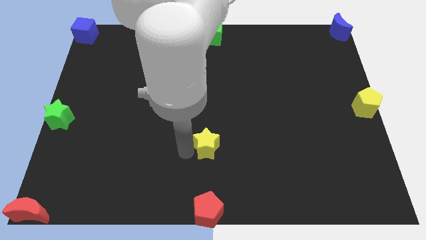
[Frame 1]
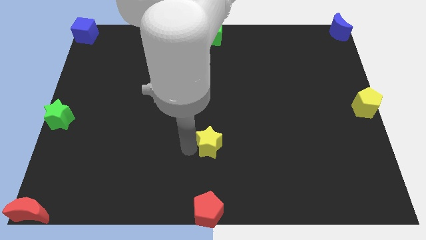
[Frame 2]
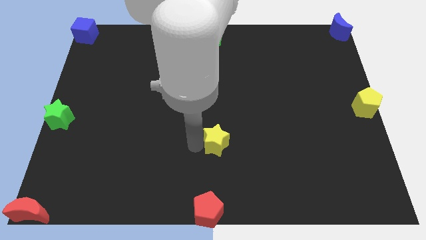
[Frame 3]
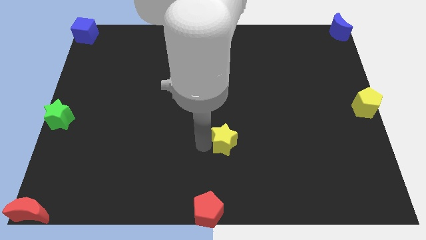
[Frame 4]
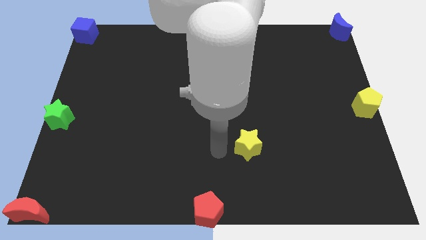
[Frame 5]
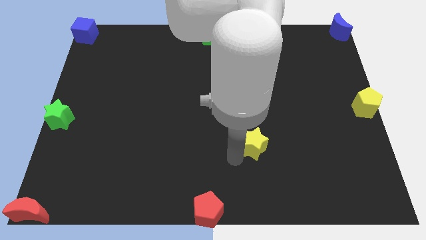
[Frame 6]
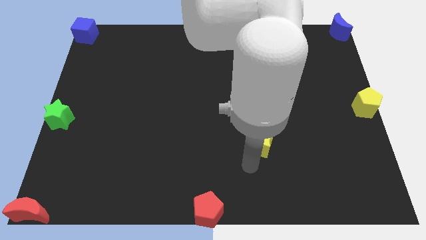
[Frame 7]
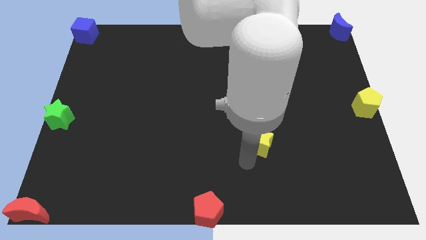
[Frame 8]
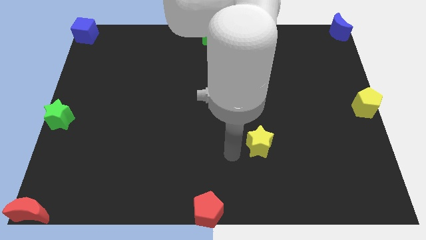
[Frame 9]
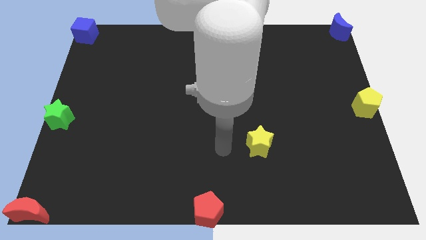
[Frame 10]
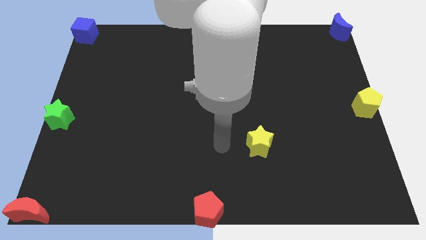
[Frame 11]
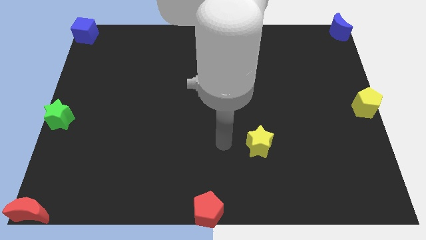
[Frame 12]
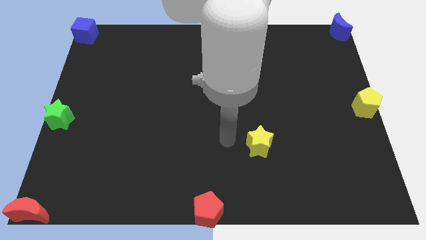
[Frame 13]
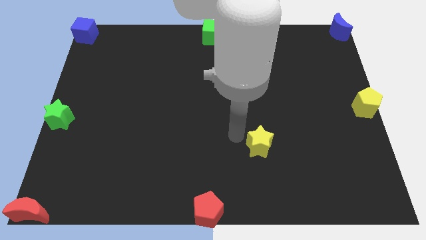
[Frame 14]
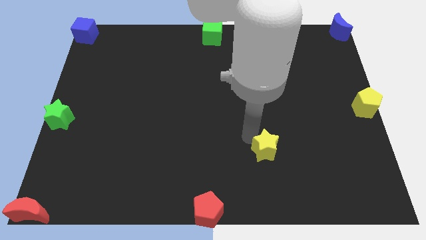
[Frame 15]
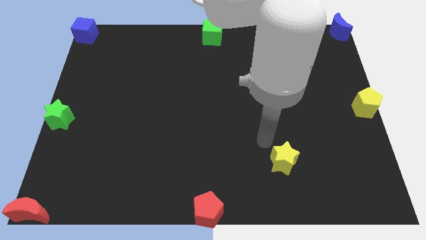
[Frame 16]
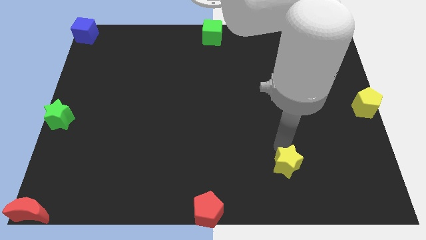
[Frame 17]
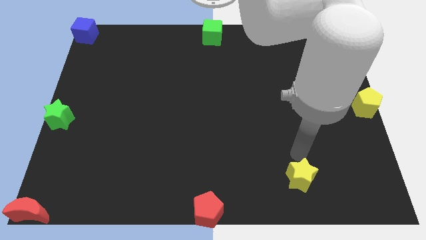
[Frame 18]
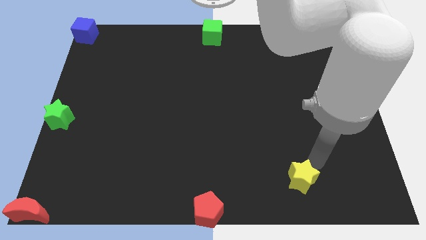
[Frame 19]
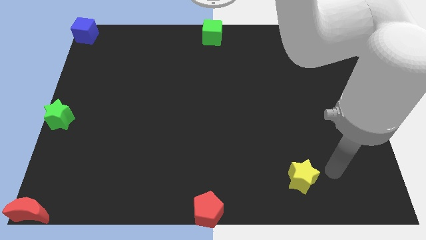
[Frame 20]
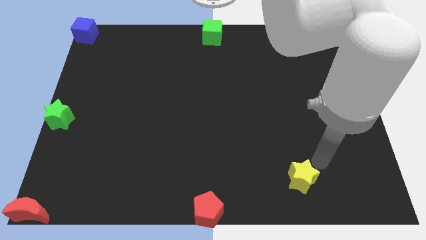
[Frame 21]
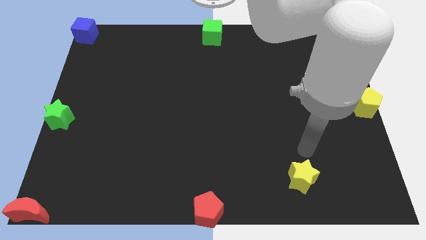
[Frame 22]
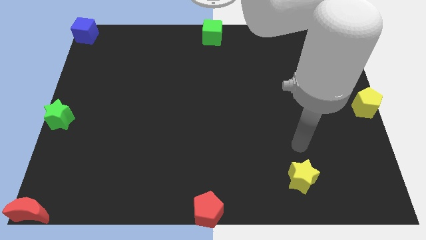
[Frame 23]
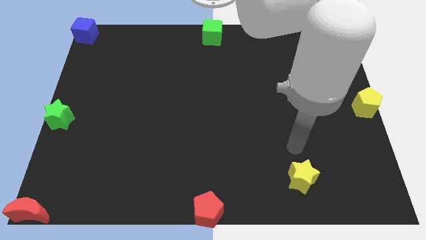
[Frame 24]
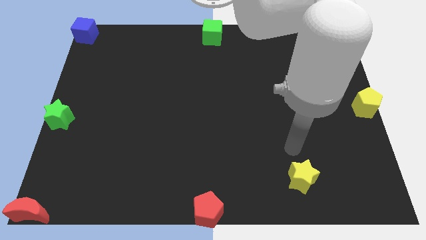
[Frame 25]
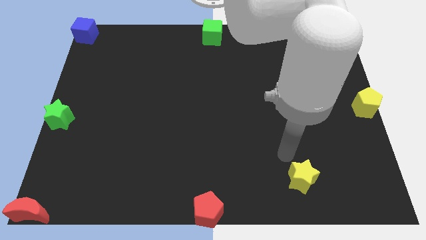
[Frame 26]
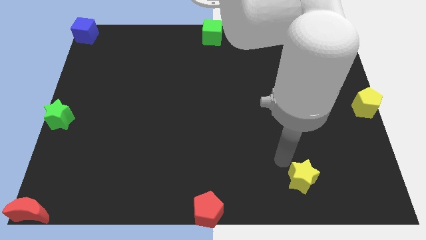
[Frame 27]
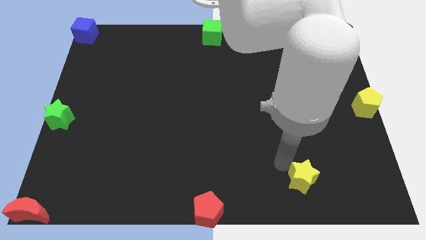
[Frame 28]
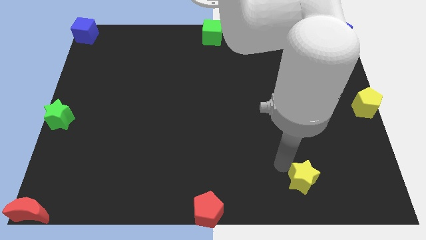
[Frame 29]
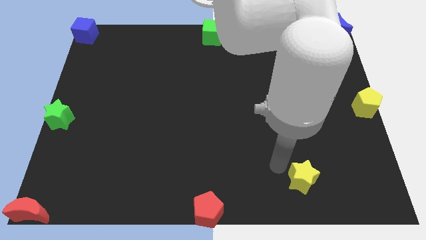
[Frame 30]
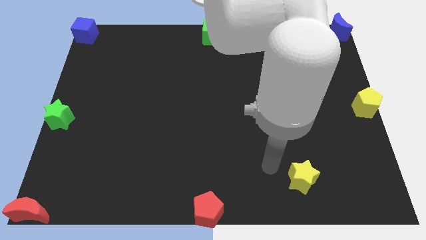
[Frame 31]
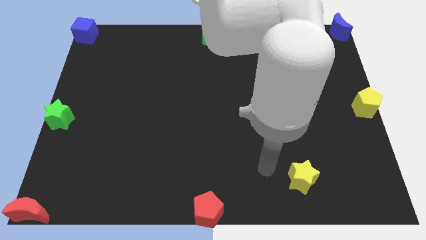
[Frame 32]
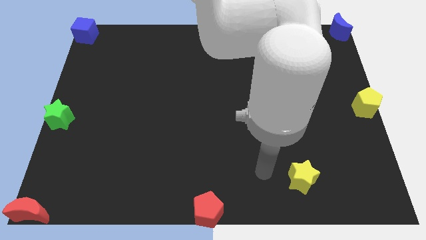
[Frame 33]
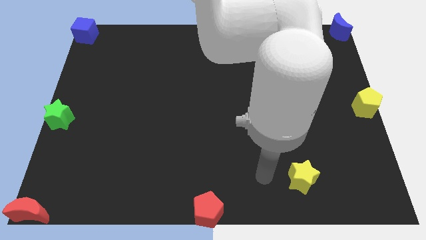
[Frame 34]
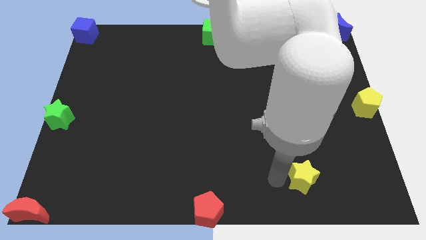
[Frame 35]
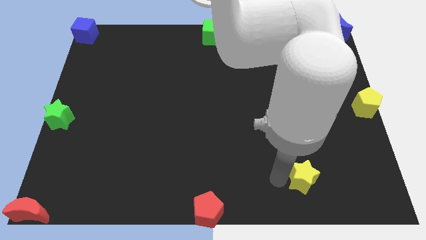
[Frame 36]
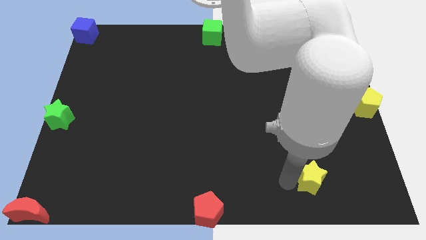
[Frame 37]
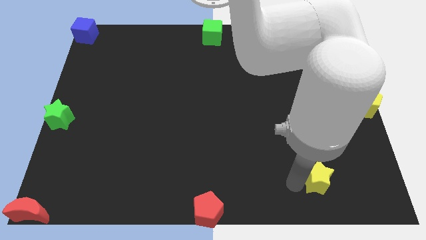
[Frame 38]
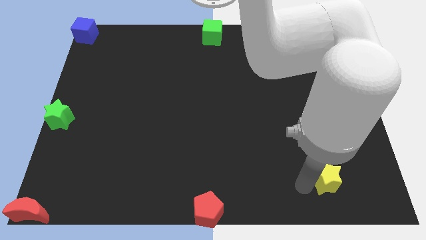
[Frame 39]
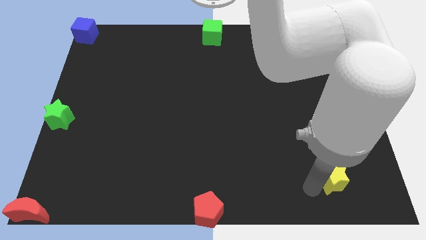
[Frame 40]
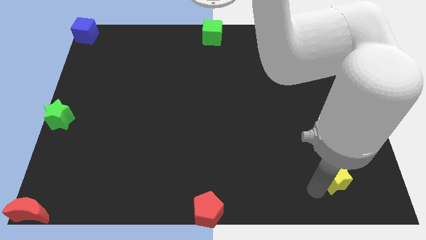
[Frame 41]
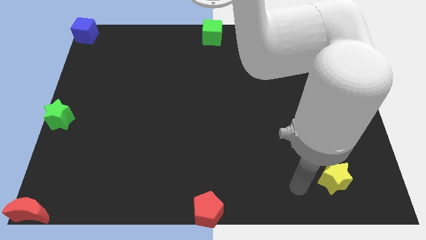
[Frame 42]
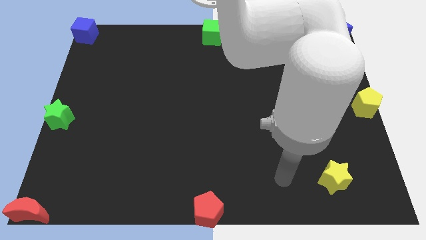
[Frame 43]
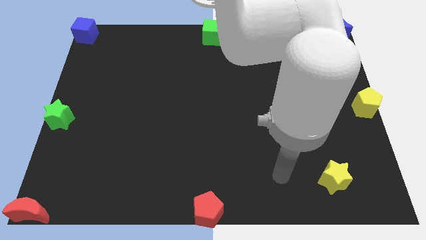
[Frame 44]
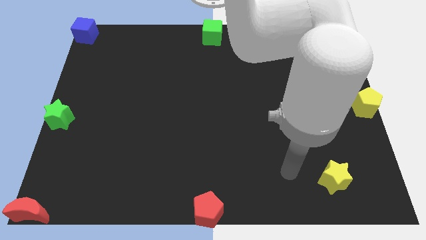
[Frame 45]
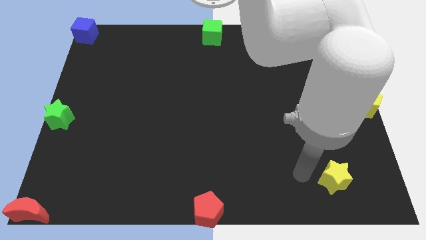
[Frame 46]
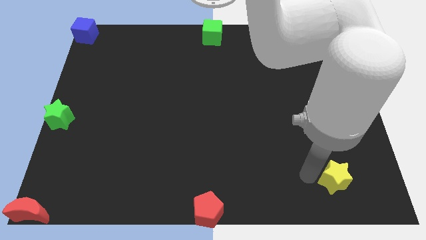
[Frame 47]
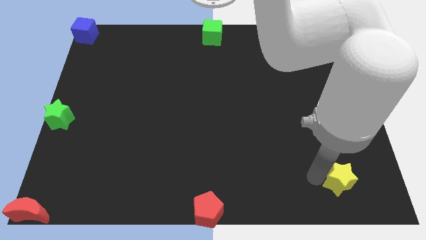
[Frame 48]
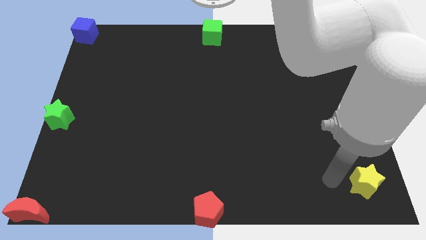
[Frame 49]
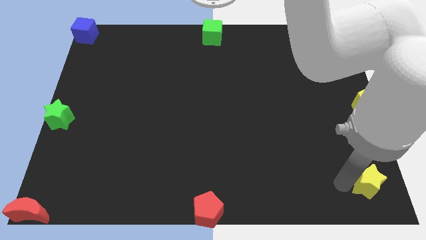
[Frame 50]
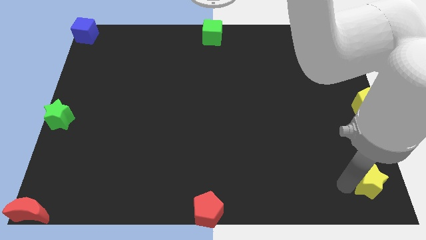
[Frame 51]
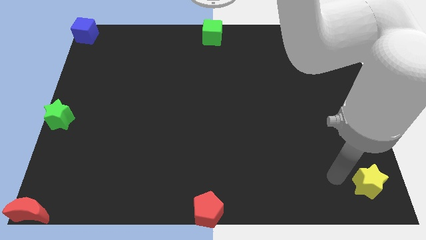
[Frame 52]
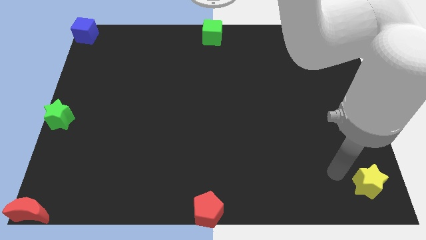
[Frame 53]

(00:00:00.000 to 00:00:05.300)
push the yellow star to the right bottom

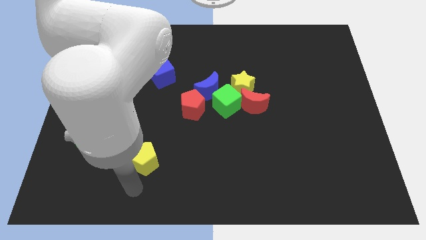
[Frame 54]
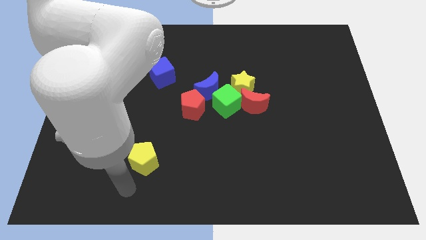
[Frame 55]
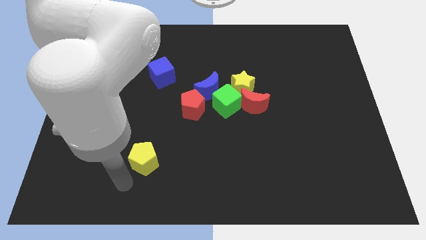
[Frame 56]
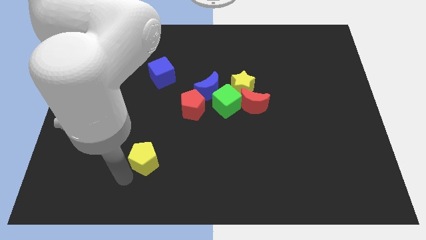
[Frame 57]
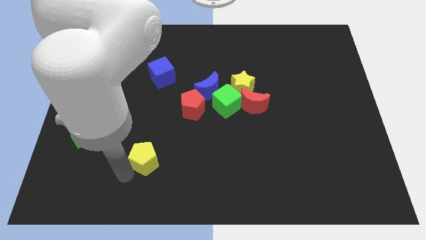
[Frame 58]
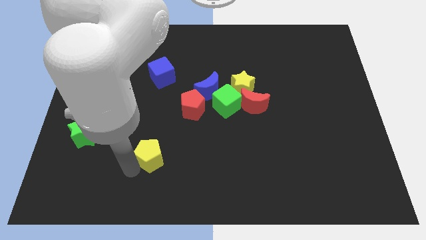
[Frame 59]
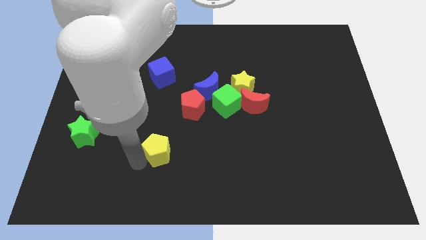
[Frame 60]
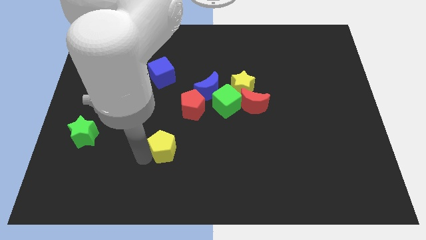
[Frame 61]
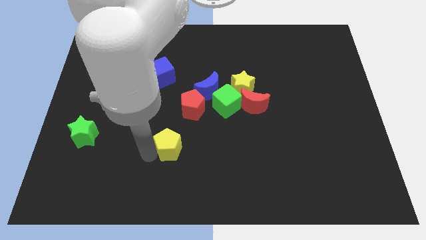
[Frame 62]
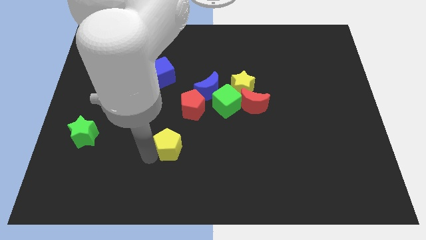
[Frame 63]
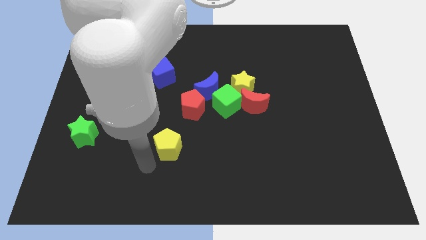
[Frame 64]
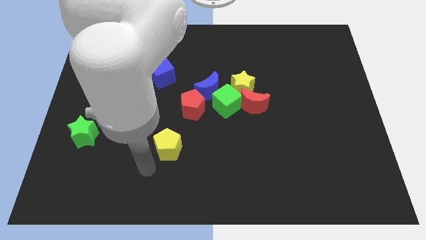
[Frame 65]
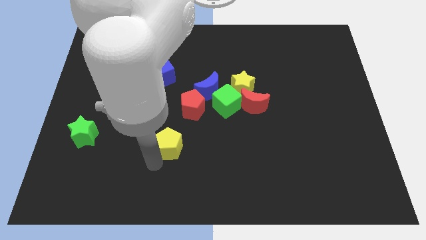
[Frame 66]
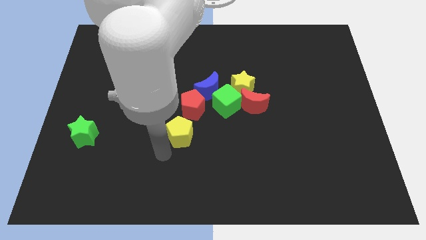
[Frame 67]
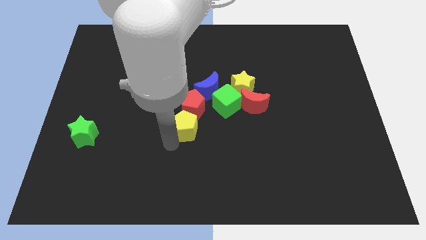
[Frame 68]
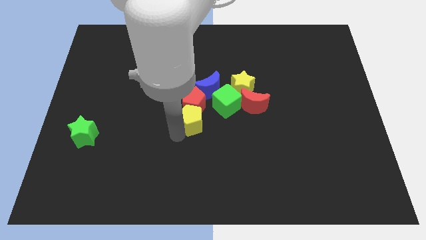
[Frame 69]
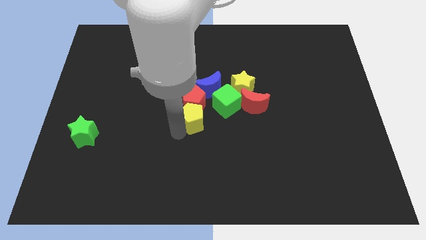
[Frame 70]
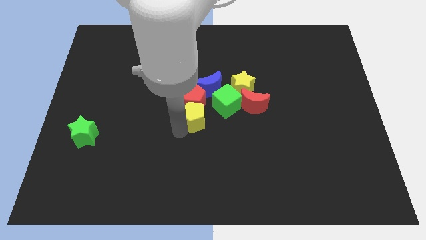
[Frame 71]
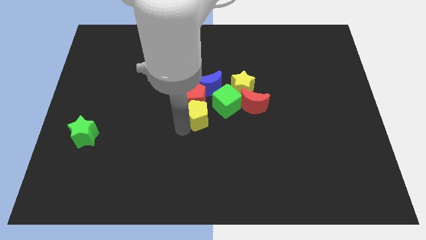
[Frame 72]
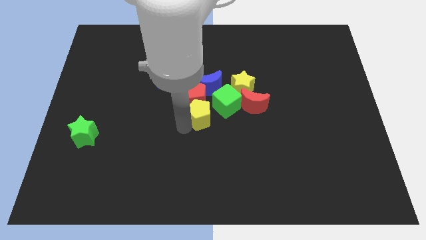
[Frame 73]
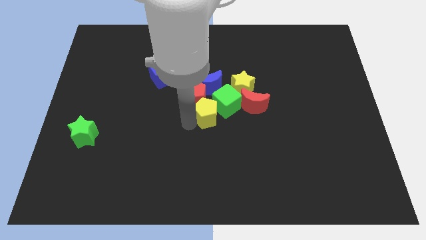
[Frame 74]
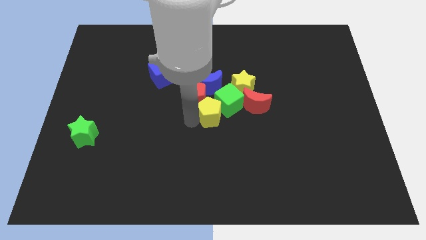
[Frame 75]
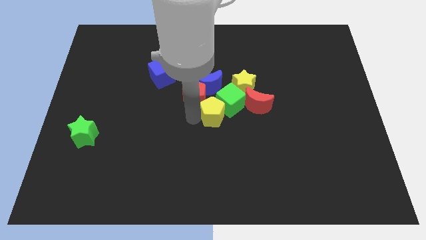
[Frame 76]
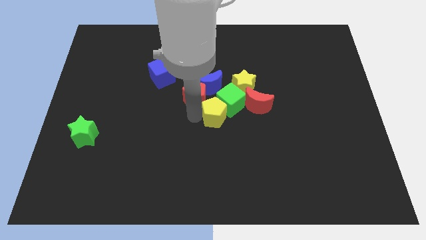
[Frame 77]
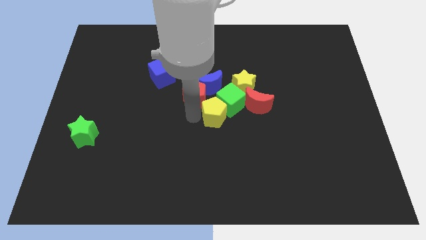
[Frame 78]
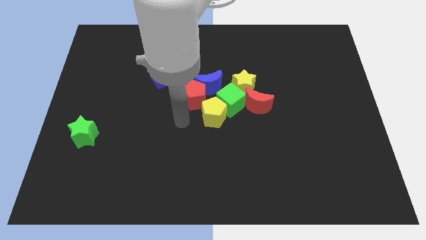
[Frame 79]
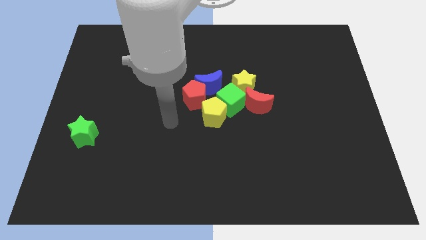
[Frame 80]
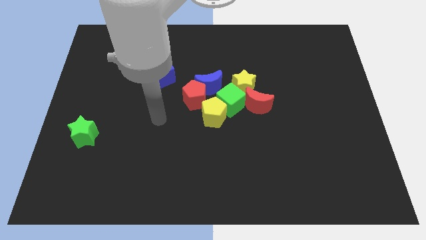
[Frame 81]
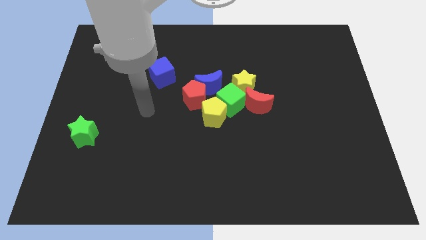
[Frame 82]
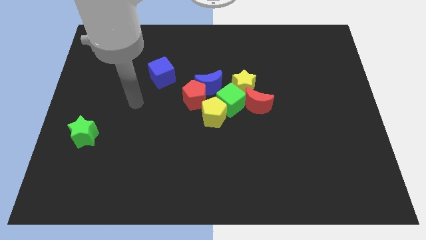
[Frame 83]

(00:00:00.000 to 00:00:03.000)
push the yellow pentgaon into the group of blocks

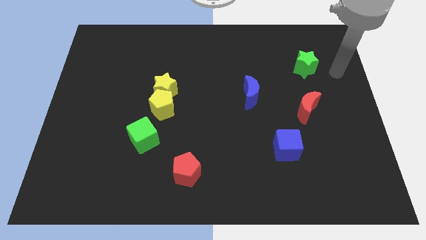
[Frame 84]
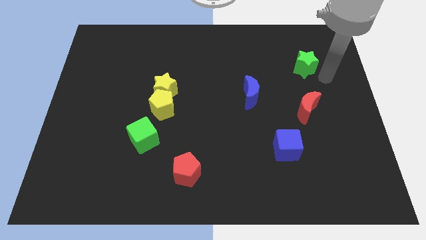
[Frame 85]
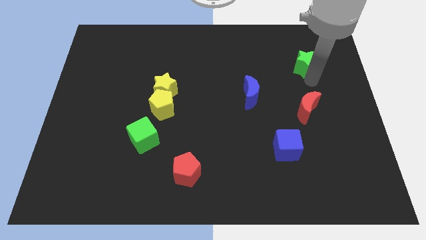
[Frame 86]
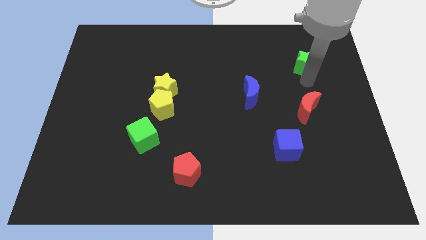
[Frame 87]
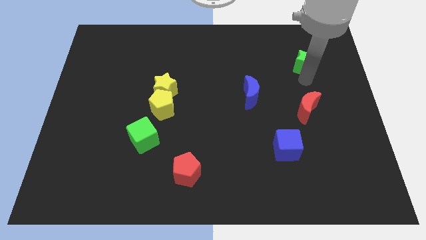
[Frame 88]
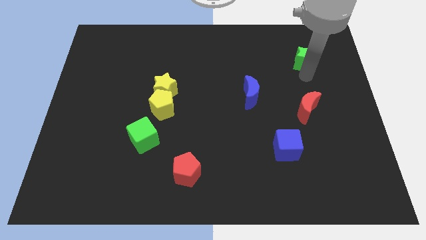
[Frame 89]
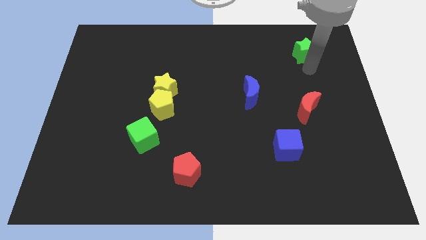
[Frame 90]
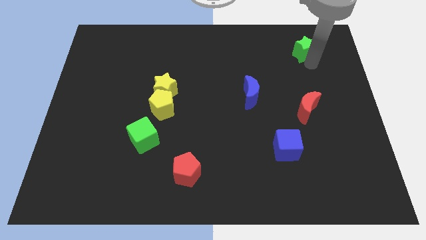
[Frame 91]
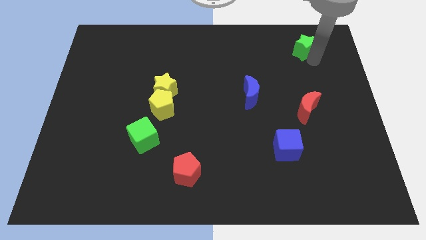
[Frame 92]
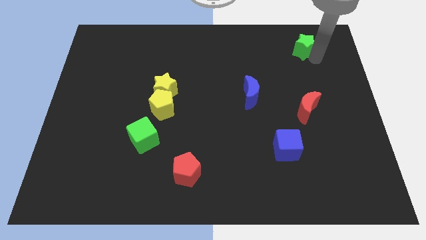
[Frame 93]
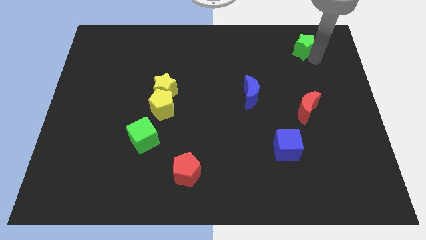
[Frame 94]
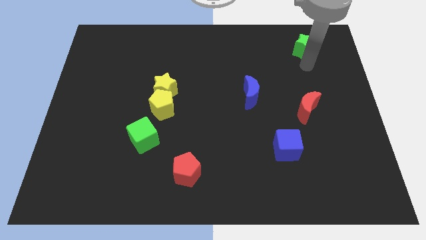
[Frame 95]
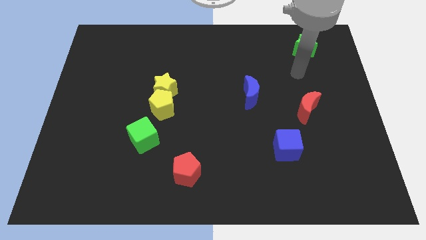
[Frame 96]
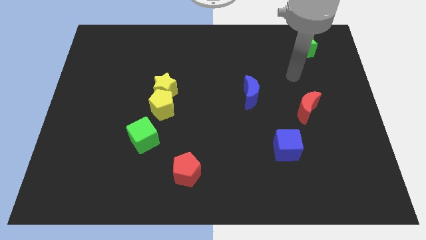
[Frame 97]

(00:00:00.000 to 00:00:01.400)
push the green star upwards
